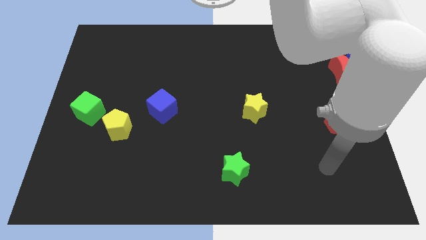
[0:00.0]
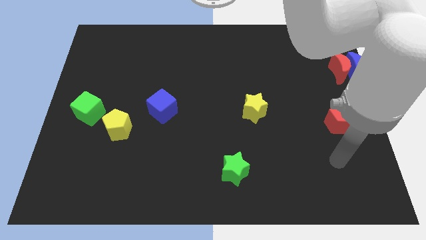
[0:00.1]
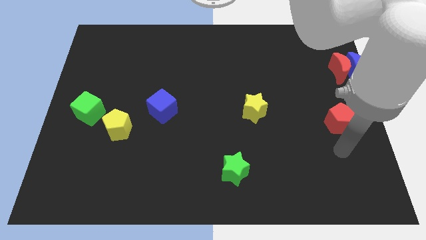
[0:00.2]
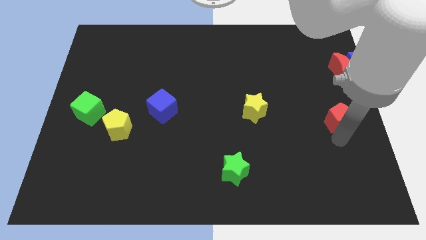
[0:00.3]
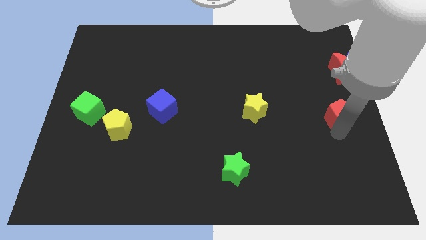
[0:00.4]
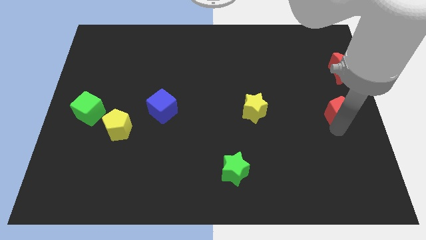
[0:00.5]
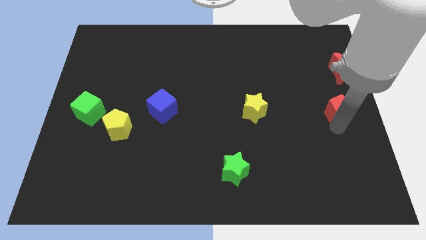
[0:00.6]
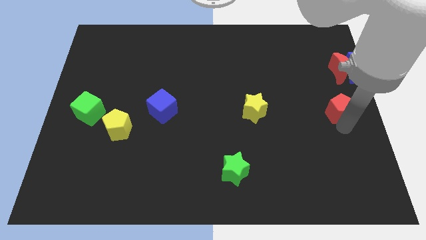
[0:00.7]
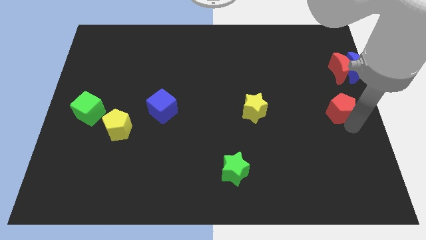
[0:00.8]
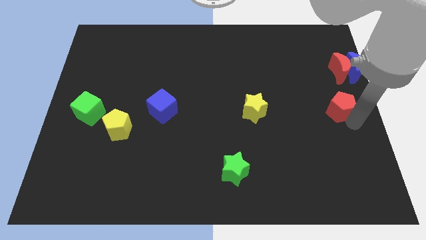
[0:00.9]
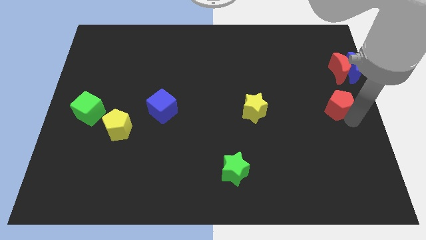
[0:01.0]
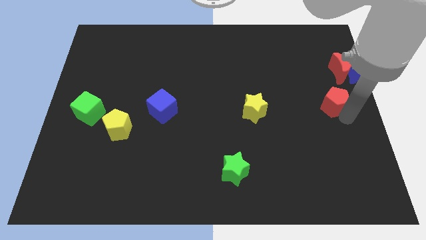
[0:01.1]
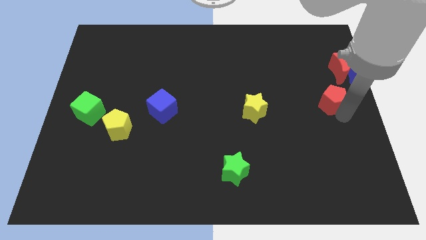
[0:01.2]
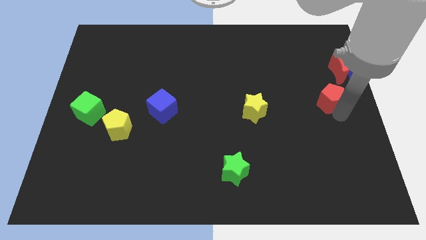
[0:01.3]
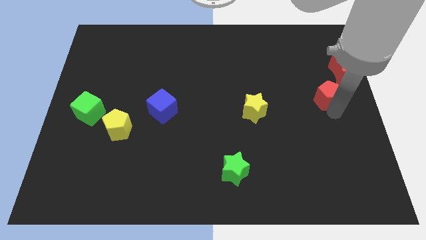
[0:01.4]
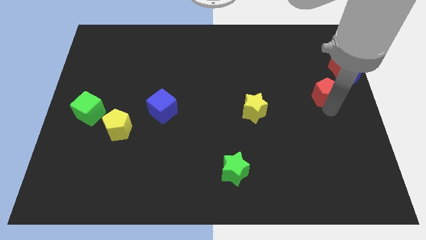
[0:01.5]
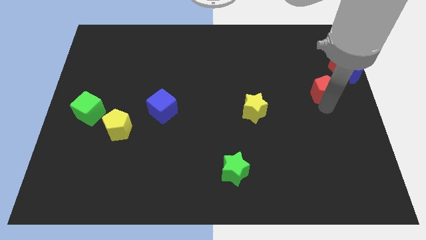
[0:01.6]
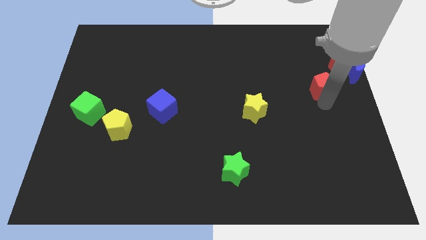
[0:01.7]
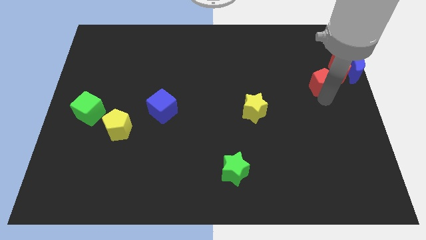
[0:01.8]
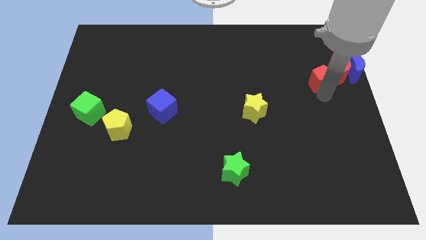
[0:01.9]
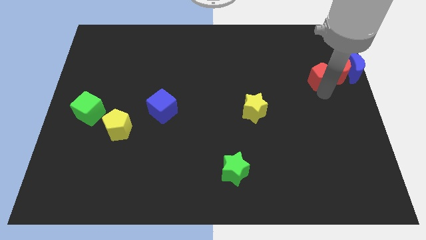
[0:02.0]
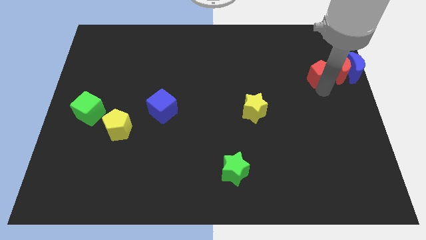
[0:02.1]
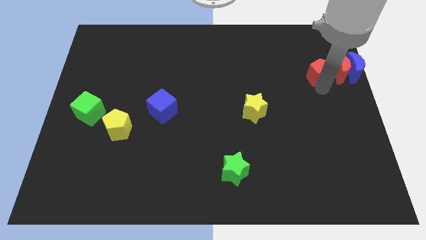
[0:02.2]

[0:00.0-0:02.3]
push red pentagon upwards

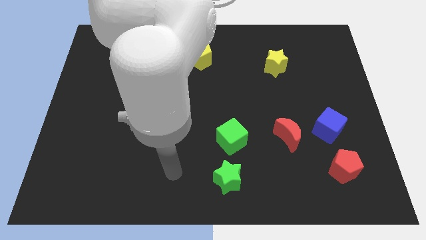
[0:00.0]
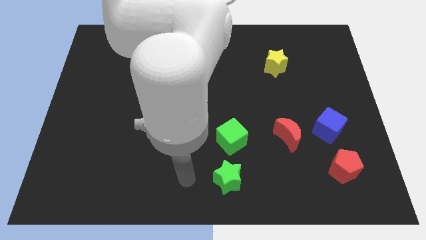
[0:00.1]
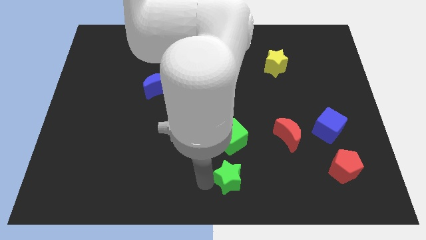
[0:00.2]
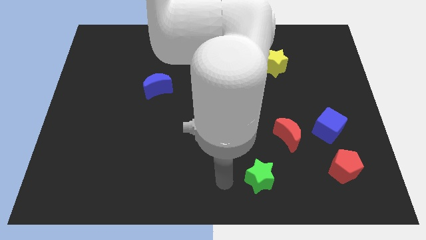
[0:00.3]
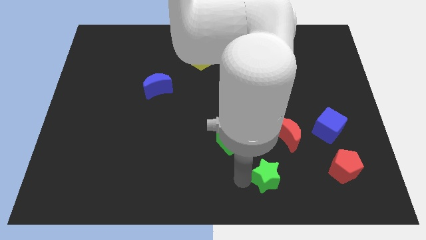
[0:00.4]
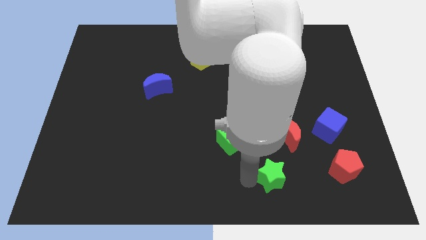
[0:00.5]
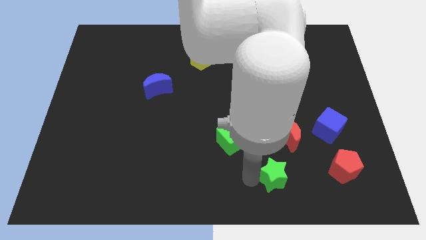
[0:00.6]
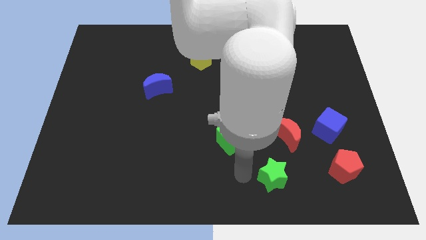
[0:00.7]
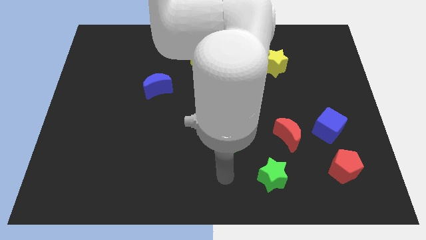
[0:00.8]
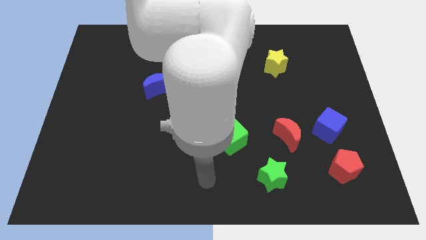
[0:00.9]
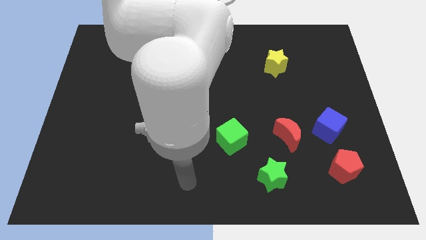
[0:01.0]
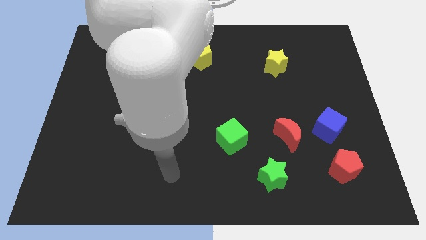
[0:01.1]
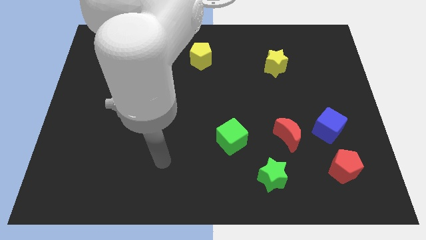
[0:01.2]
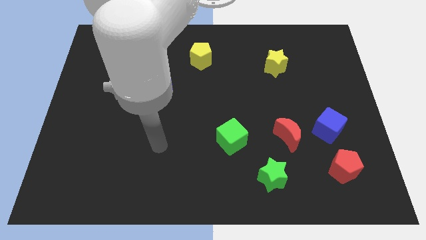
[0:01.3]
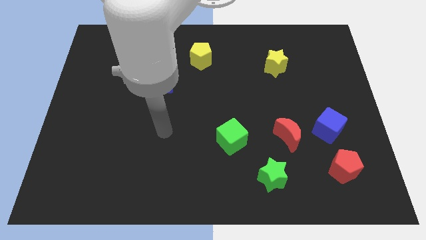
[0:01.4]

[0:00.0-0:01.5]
place the green star to the bottom left of the red moon

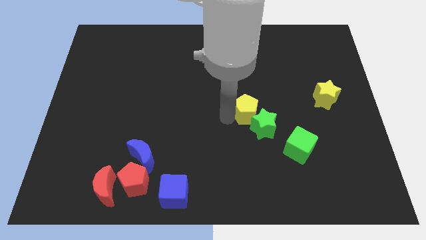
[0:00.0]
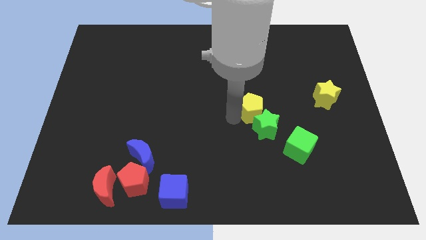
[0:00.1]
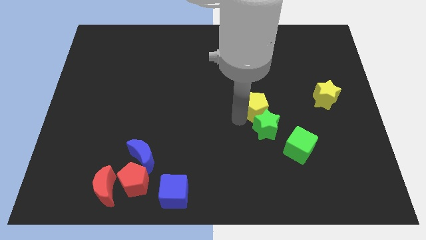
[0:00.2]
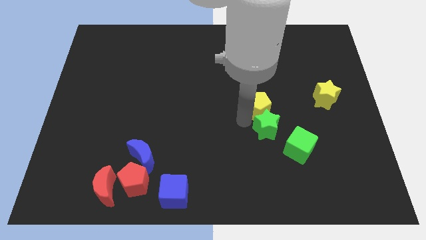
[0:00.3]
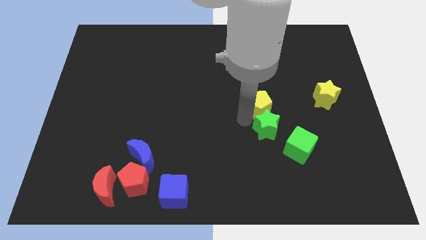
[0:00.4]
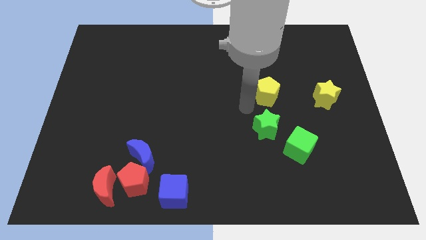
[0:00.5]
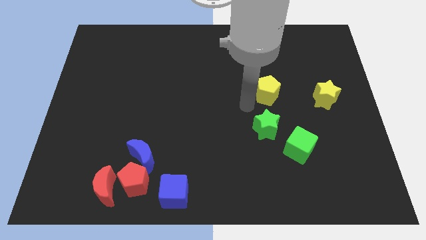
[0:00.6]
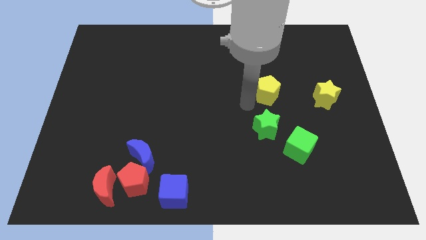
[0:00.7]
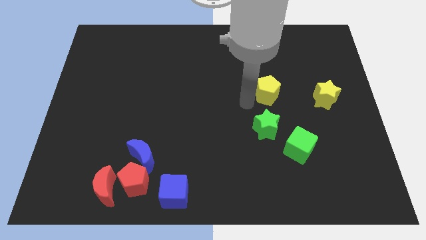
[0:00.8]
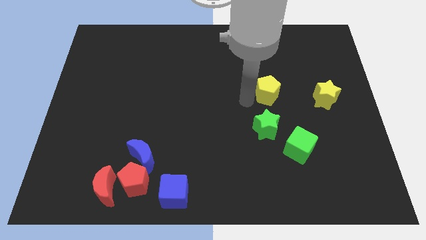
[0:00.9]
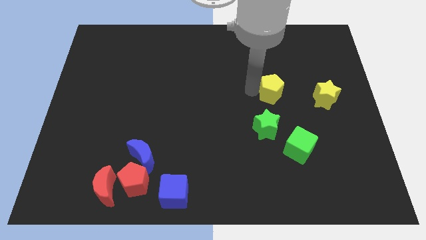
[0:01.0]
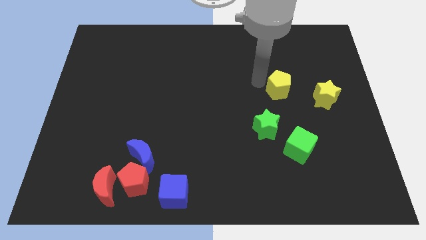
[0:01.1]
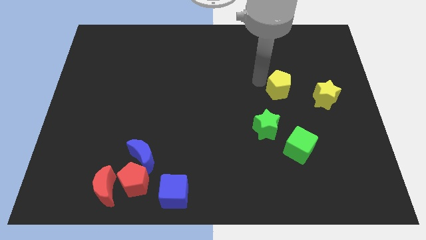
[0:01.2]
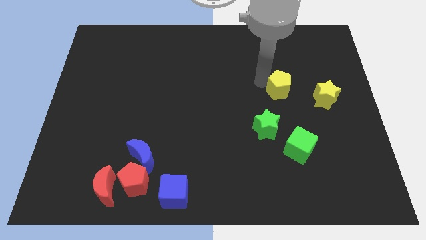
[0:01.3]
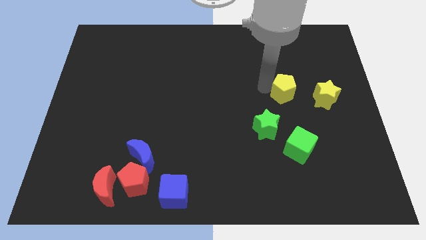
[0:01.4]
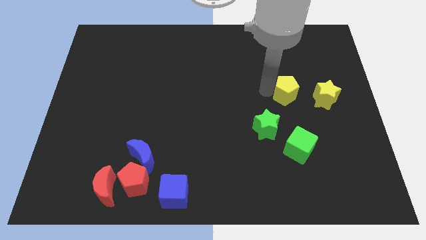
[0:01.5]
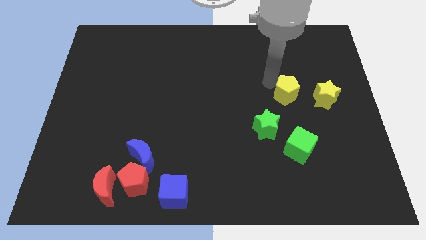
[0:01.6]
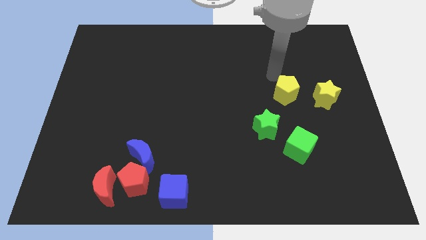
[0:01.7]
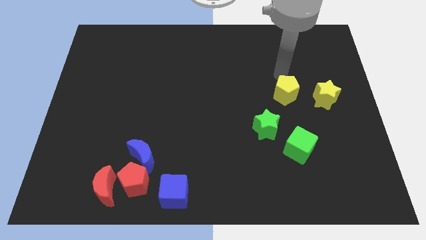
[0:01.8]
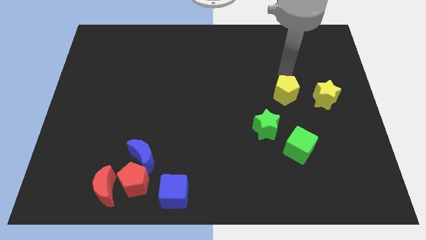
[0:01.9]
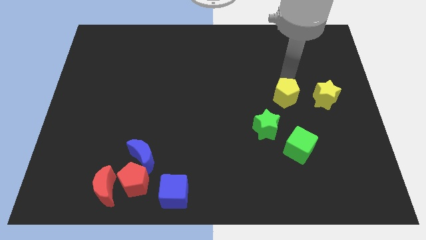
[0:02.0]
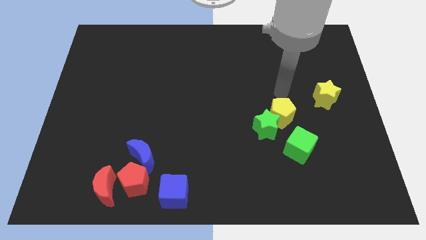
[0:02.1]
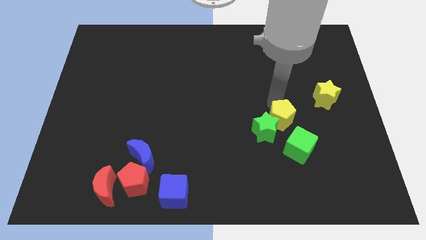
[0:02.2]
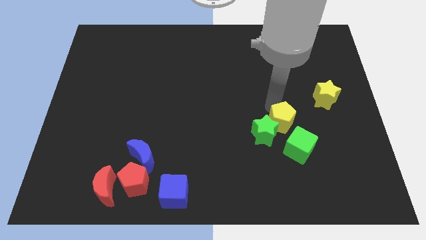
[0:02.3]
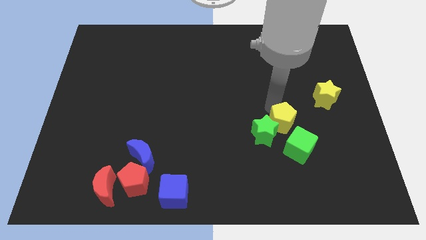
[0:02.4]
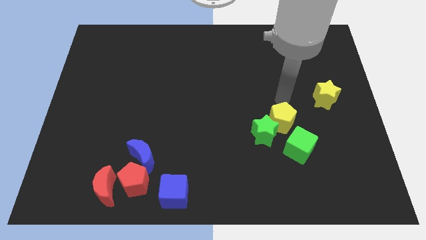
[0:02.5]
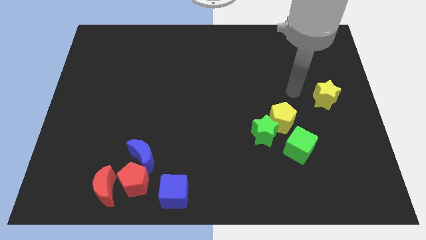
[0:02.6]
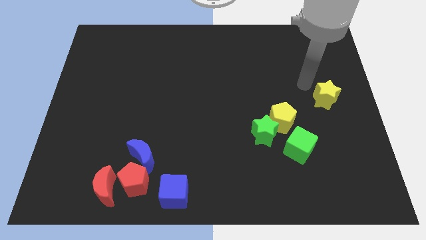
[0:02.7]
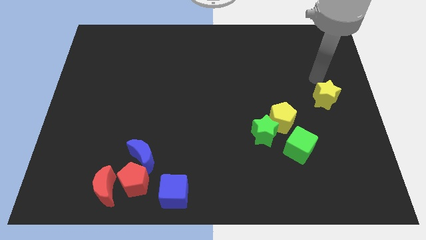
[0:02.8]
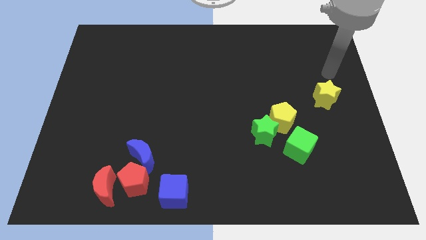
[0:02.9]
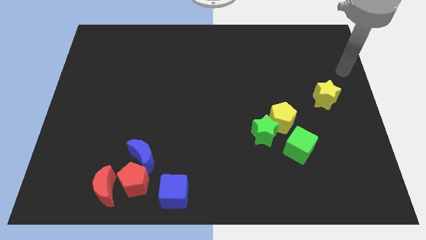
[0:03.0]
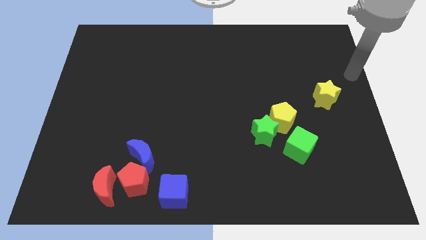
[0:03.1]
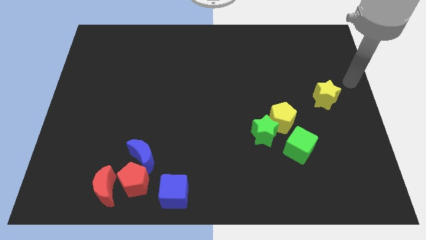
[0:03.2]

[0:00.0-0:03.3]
slide the yellow pentagon into the green star

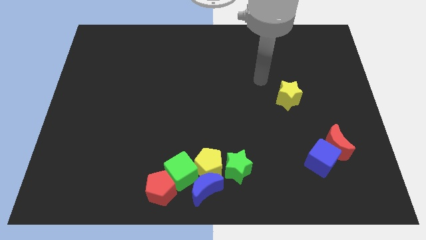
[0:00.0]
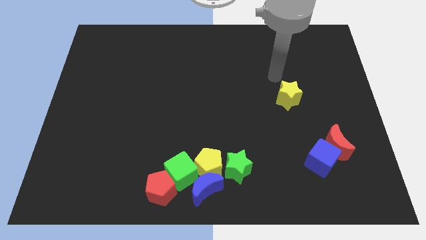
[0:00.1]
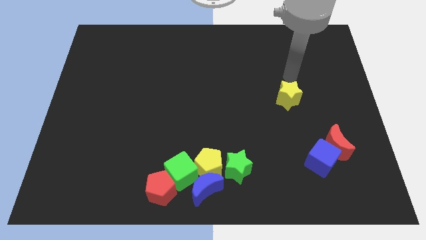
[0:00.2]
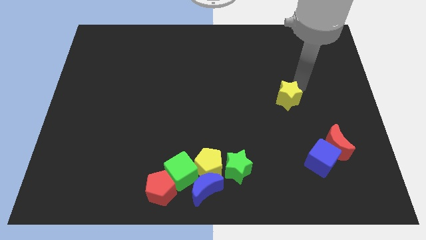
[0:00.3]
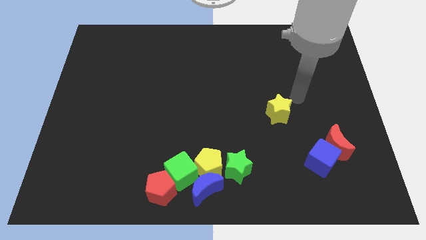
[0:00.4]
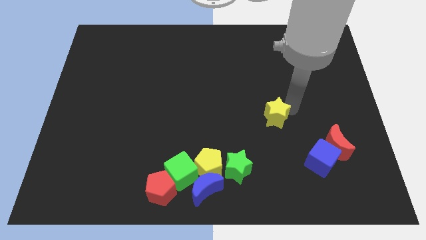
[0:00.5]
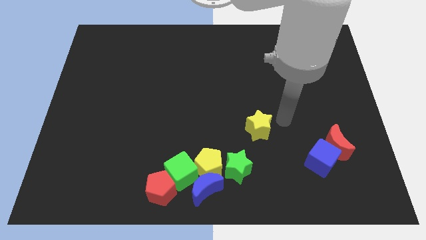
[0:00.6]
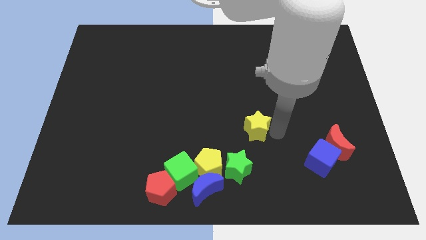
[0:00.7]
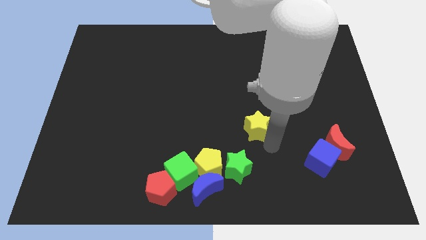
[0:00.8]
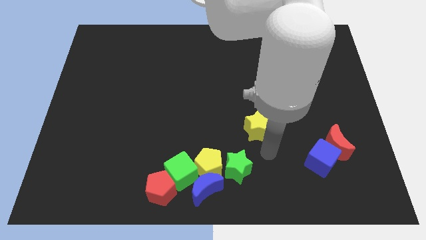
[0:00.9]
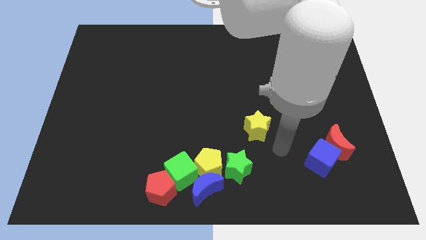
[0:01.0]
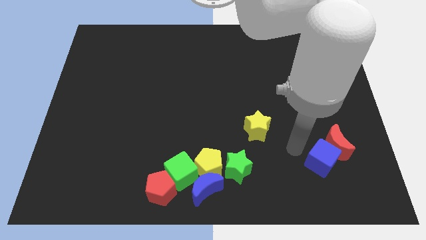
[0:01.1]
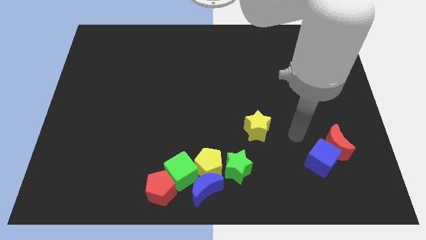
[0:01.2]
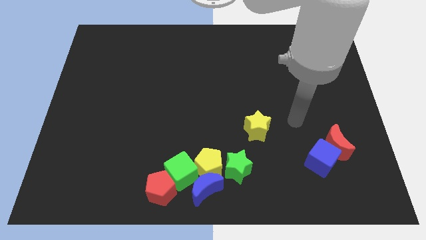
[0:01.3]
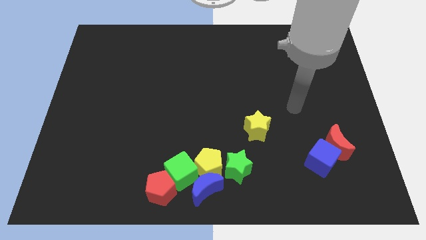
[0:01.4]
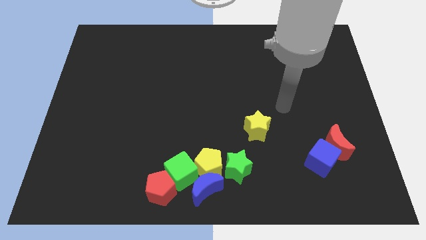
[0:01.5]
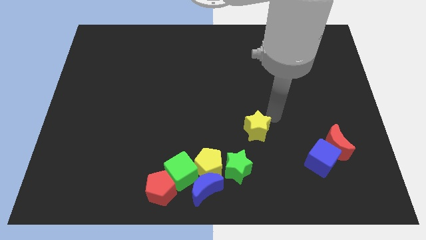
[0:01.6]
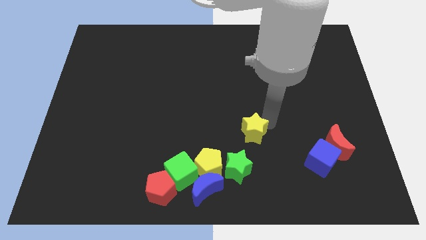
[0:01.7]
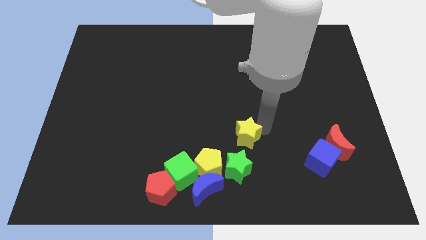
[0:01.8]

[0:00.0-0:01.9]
move the yellow star to the bottom side of the board
